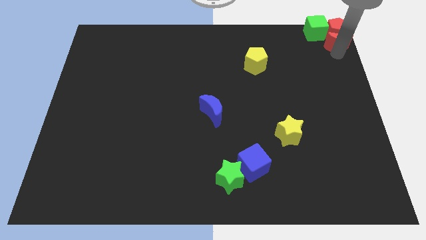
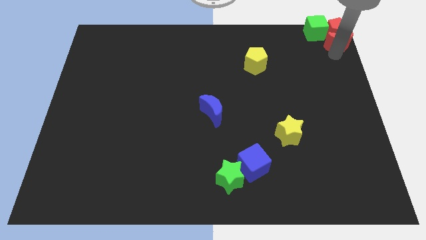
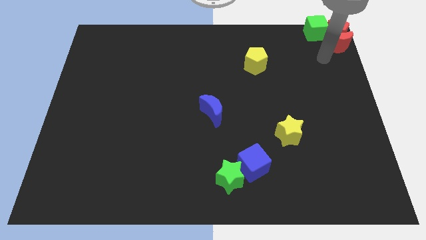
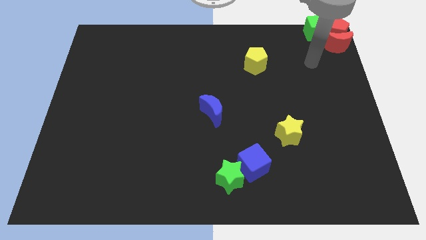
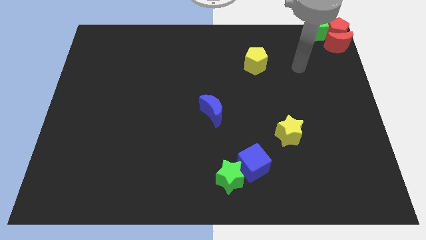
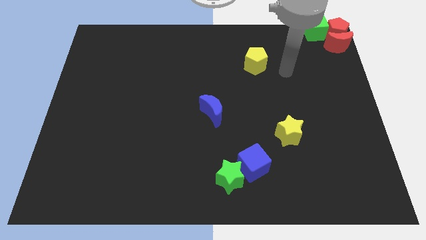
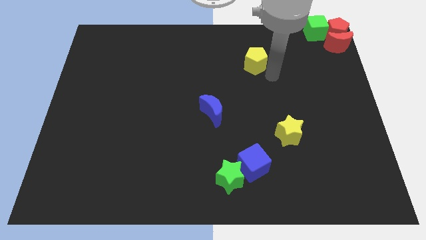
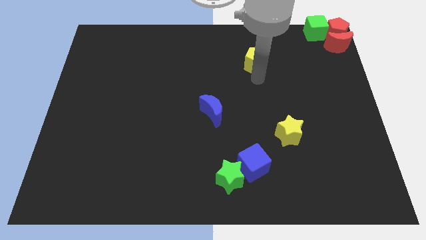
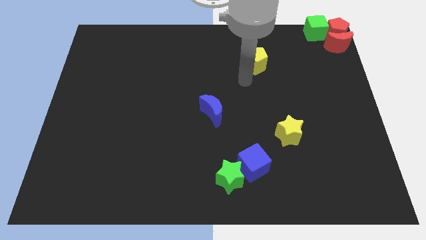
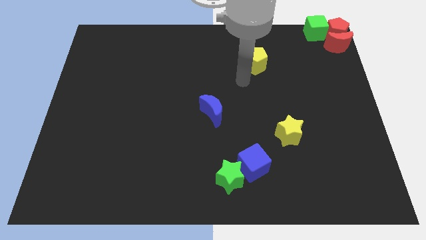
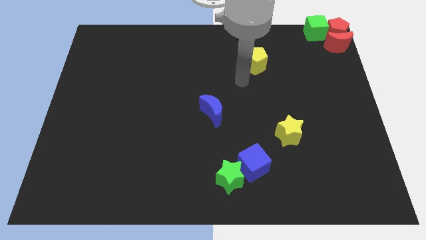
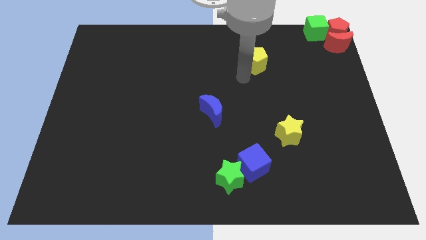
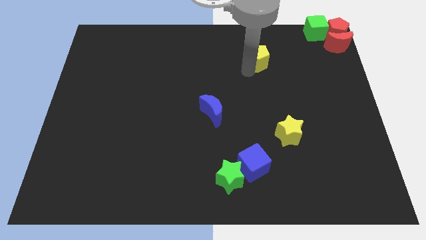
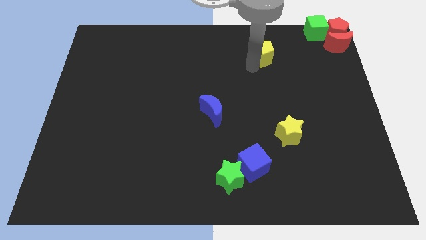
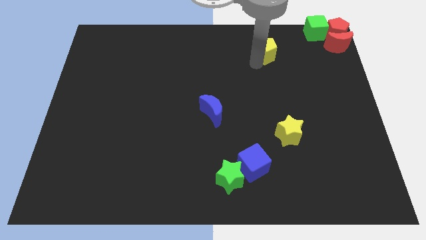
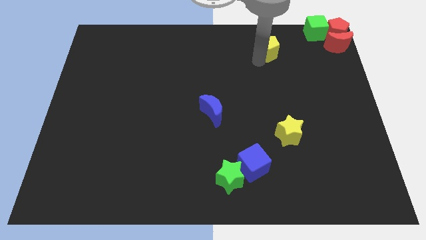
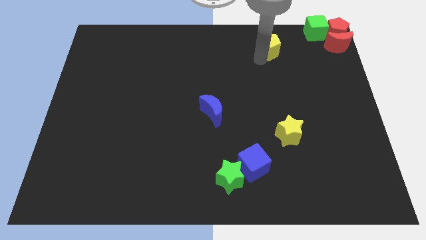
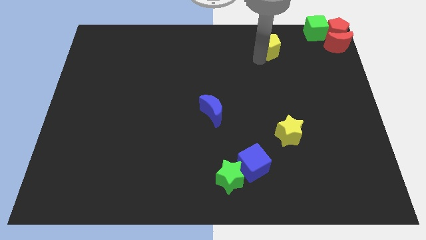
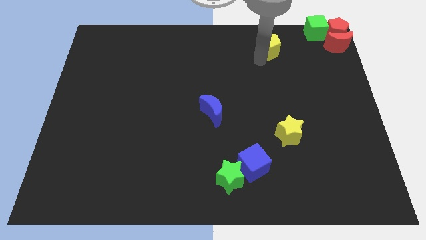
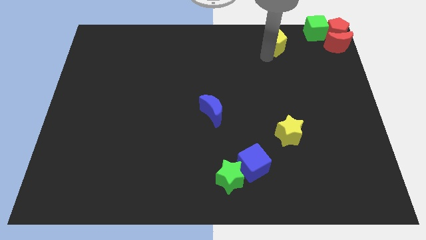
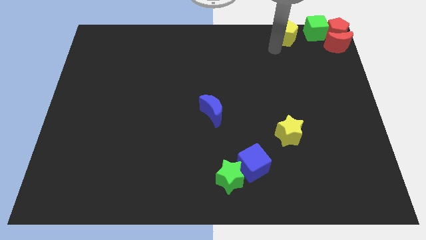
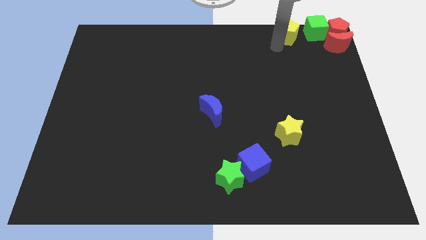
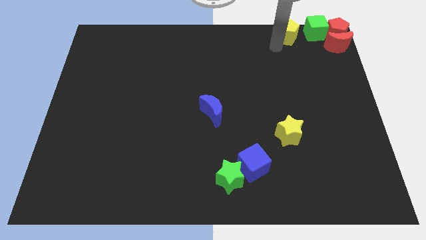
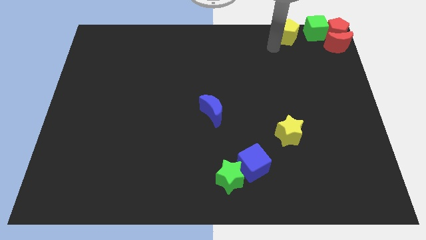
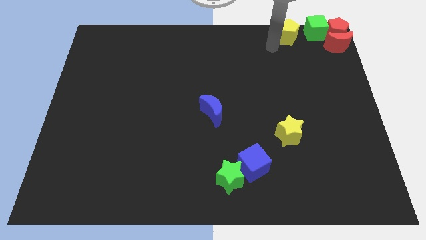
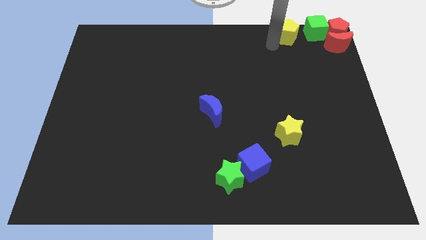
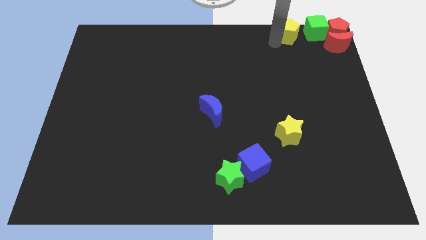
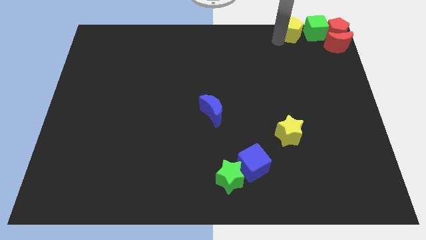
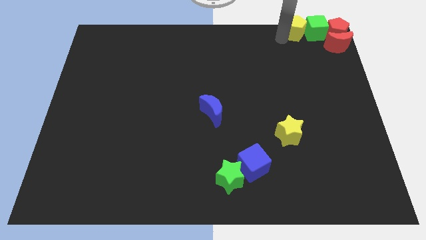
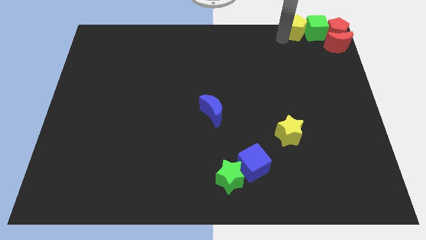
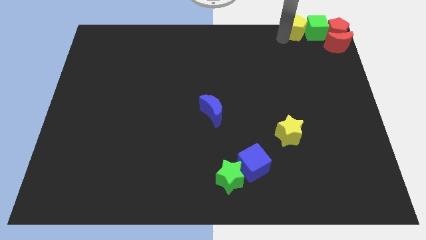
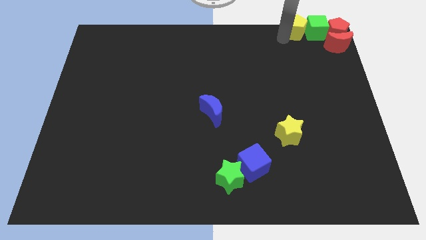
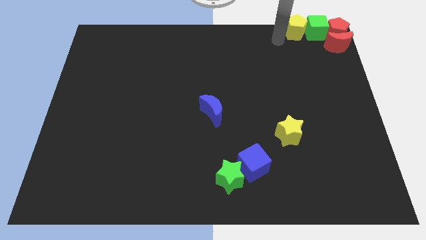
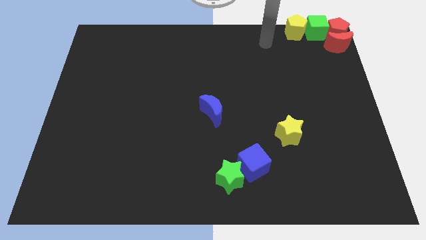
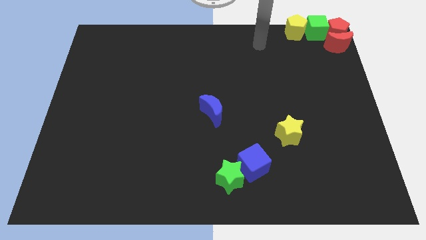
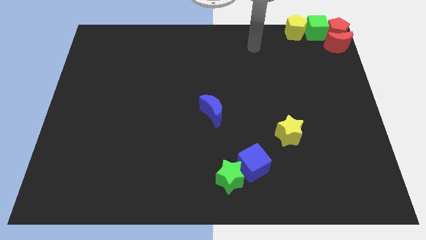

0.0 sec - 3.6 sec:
move the yellow pentagon to the left side of the green cube

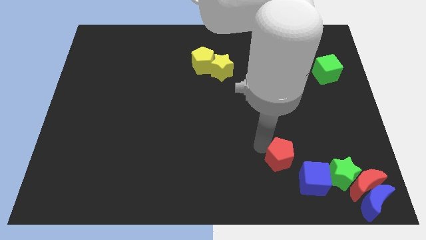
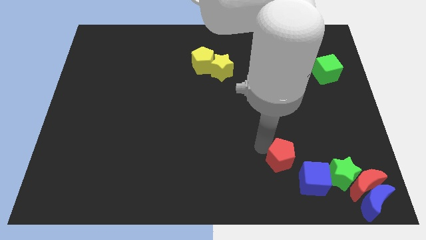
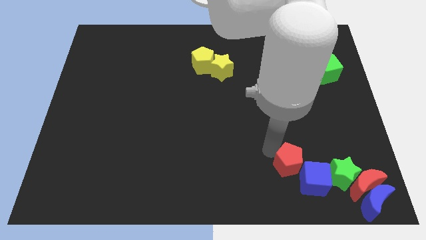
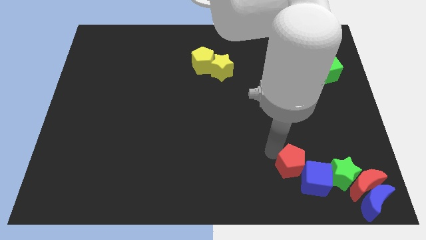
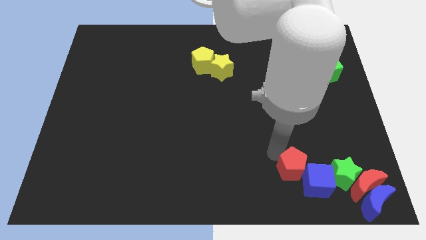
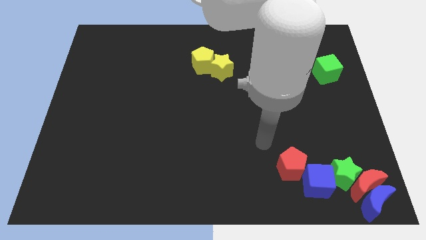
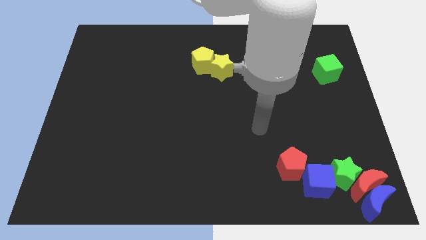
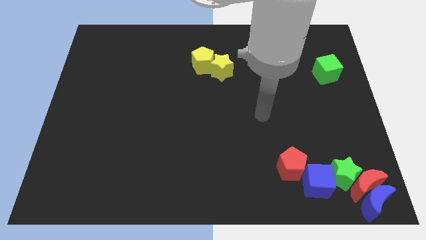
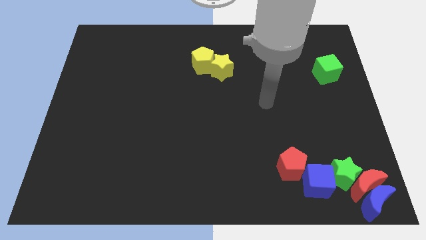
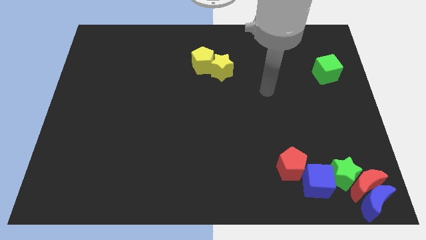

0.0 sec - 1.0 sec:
push the red pentagon into the blue cube

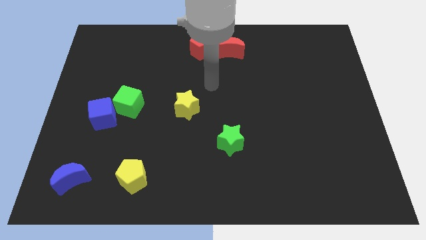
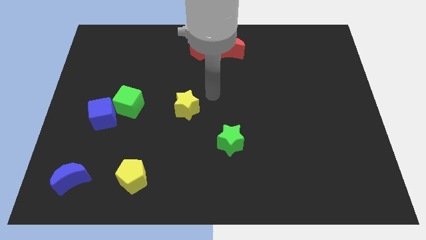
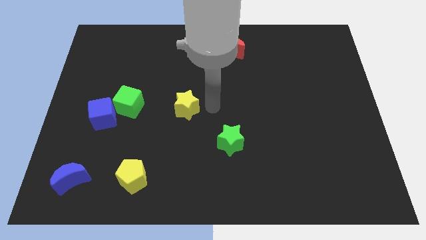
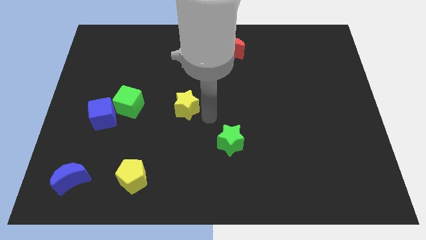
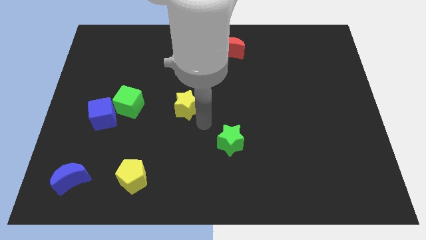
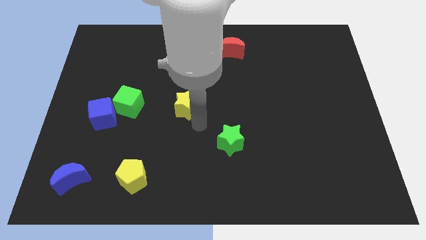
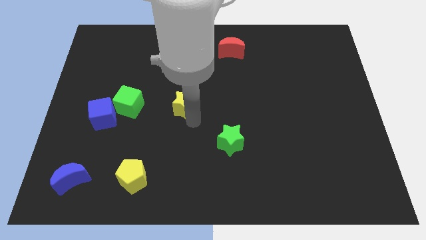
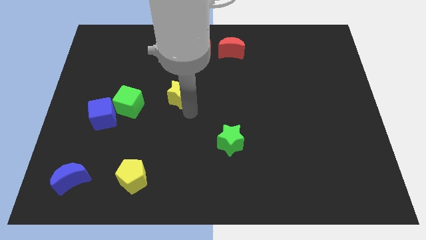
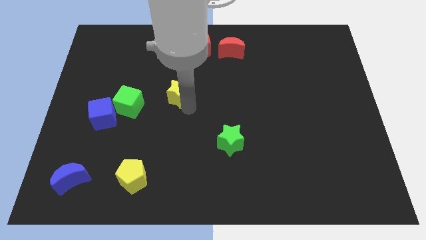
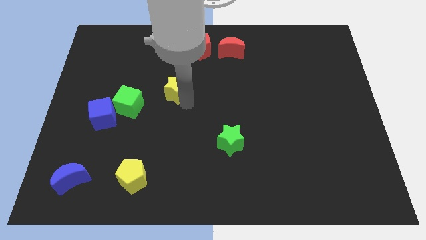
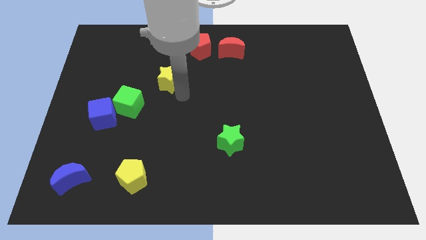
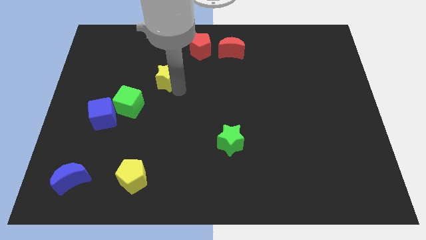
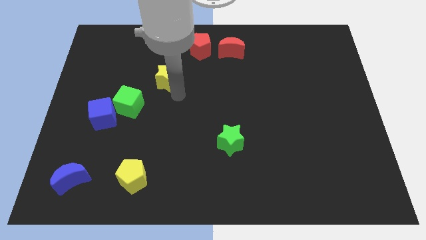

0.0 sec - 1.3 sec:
move the yellow star diagonal to the green cube

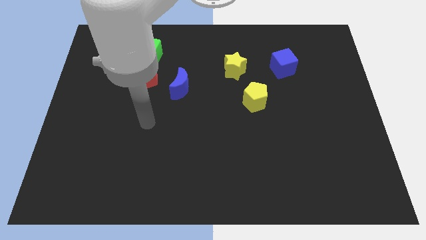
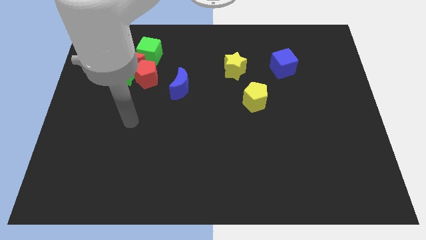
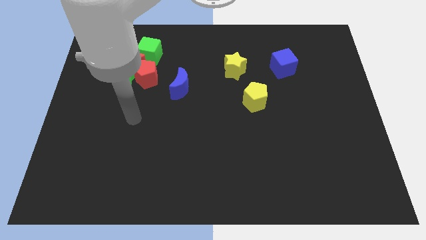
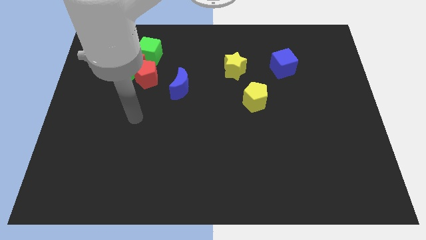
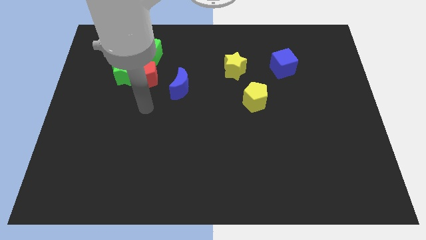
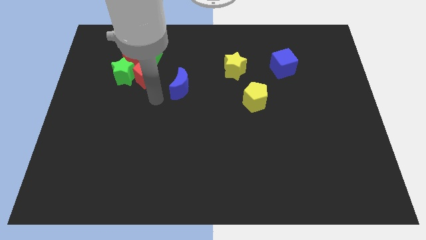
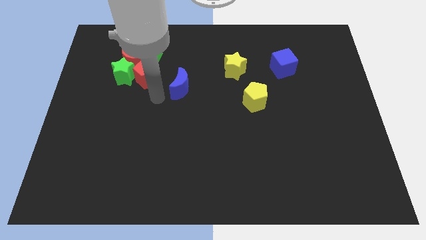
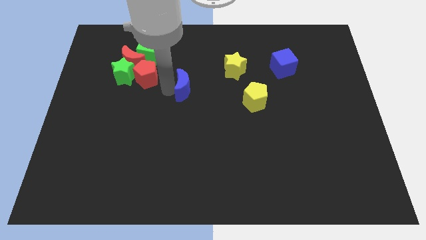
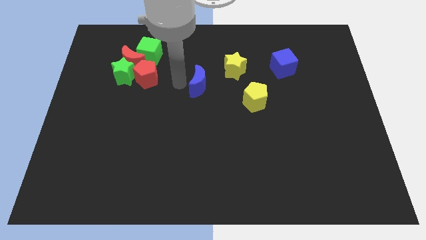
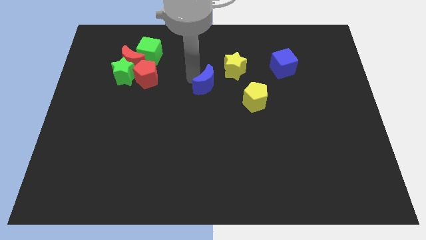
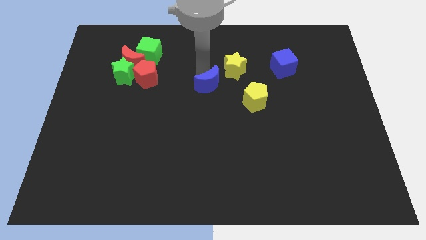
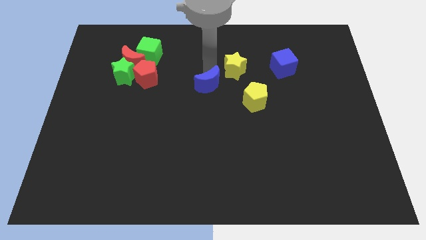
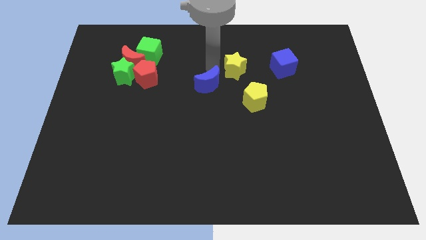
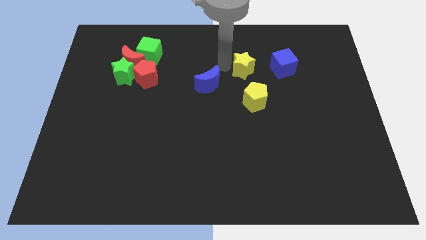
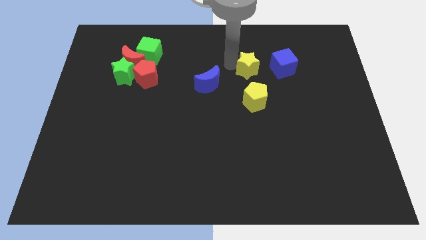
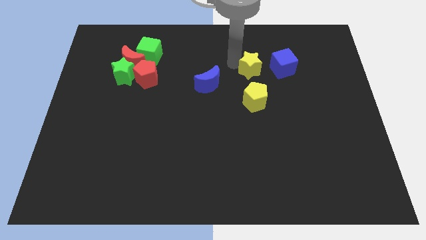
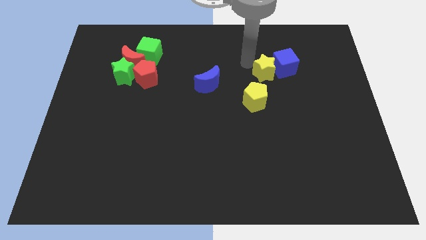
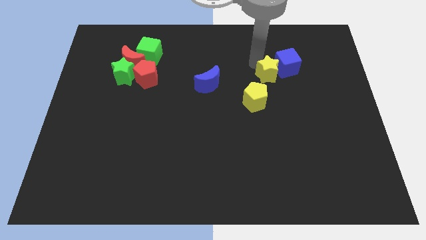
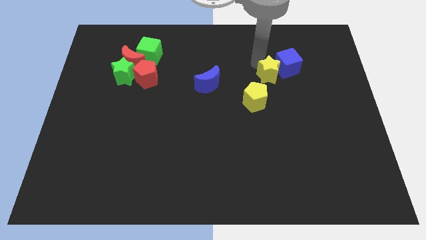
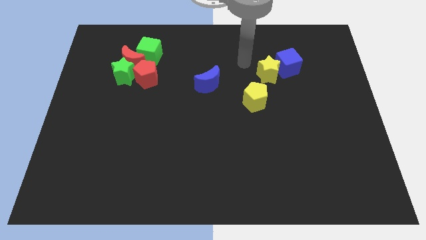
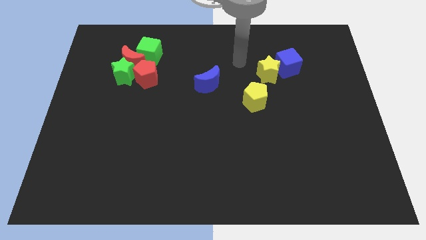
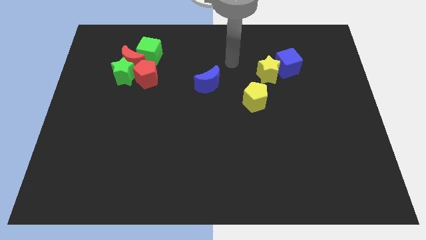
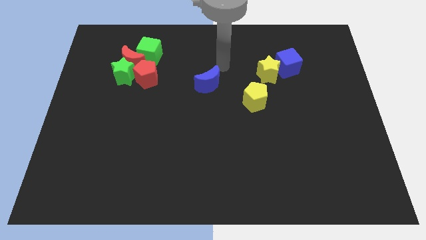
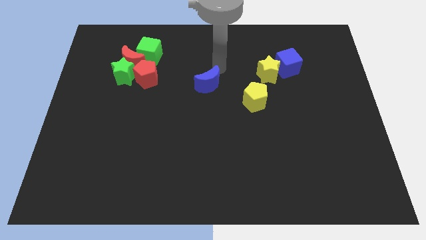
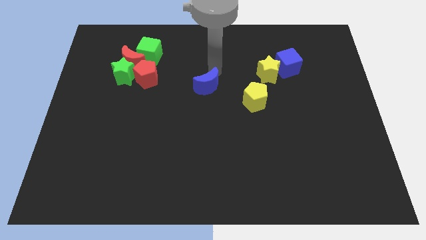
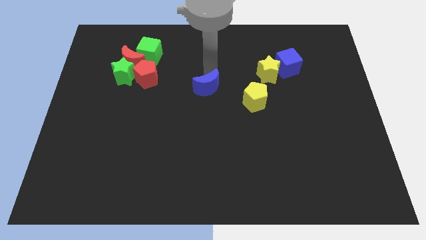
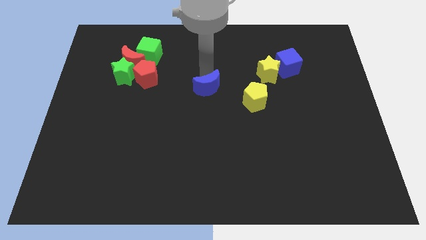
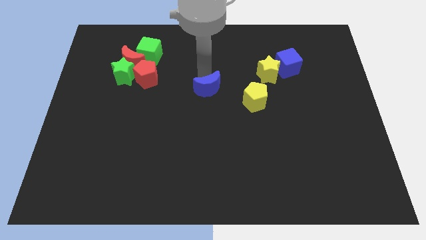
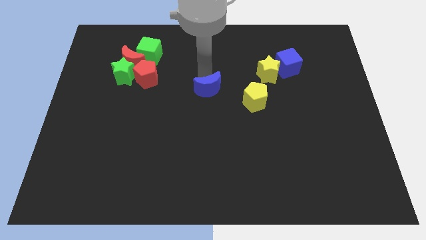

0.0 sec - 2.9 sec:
adjust blue crescent and yellow star to form a line

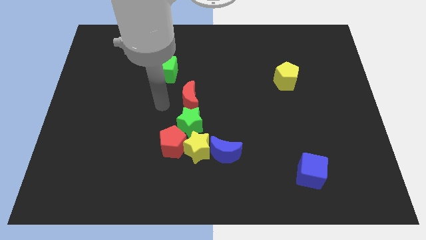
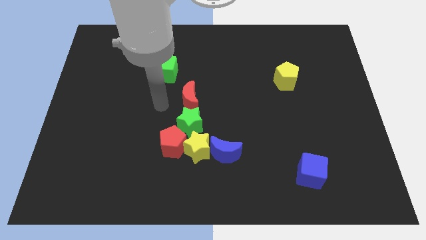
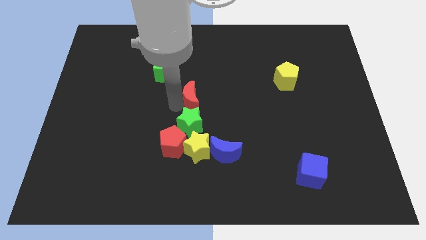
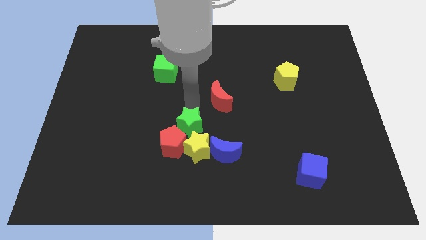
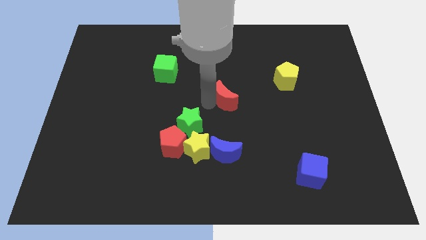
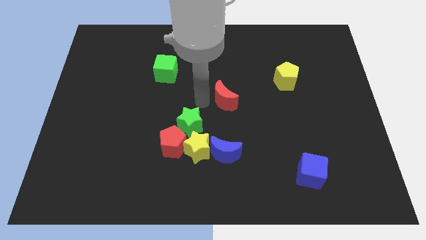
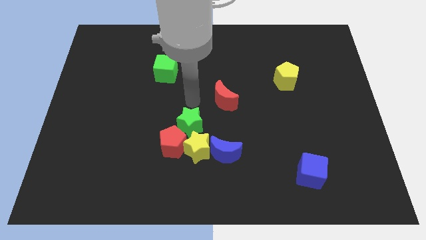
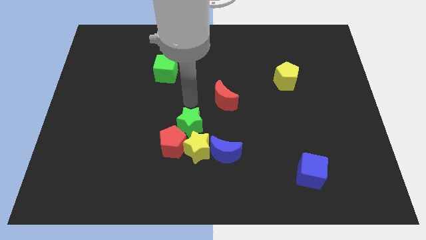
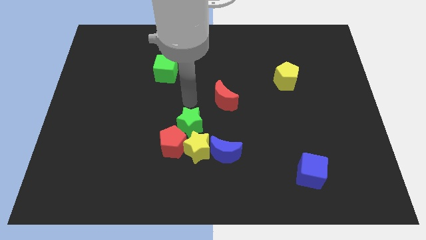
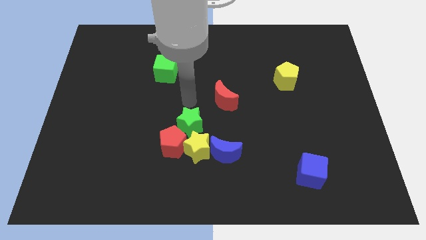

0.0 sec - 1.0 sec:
separate the red crescent from the green star
